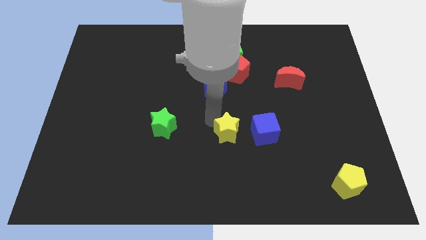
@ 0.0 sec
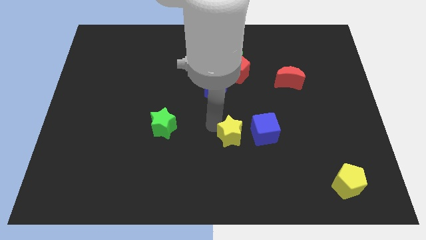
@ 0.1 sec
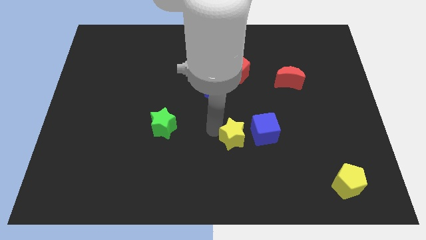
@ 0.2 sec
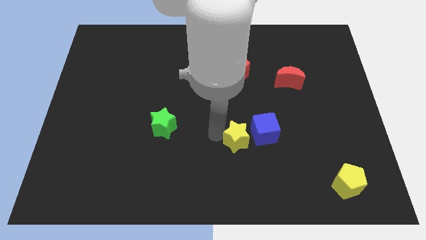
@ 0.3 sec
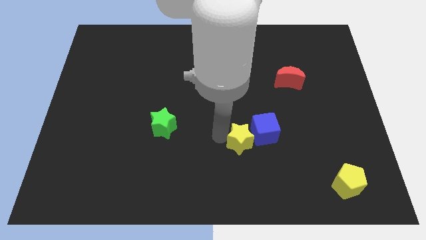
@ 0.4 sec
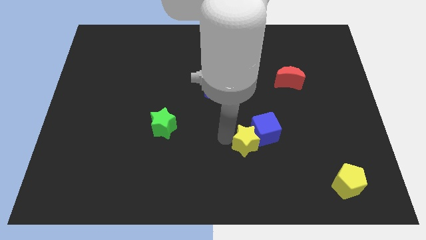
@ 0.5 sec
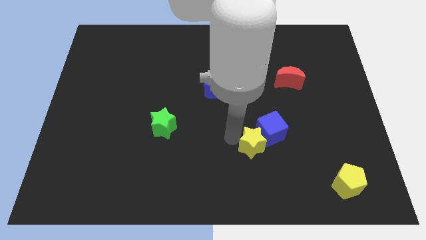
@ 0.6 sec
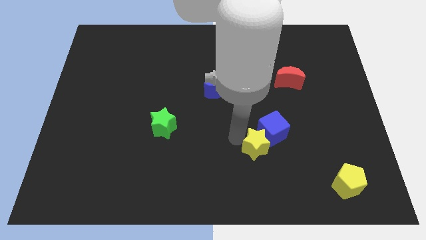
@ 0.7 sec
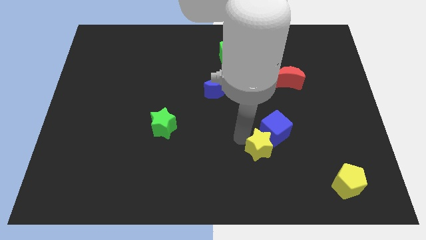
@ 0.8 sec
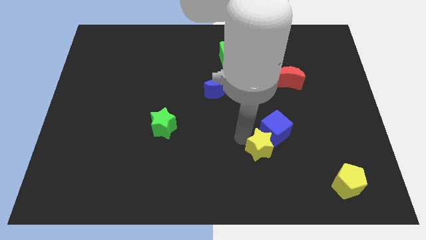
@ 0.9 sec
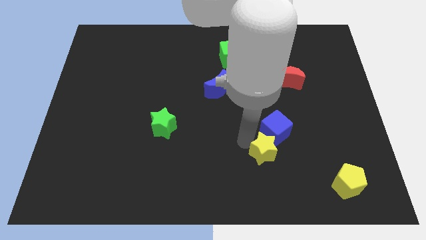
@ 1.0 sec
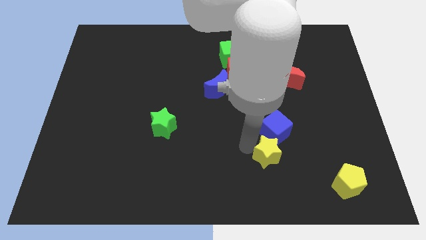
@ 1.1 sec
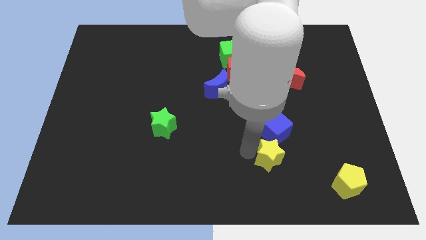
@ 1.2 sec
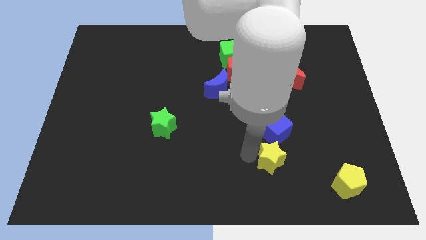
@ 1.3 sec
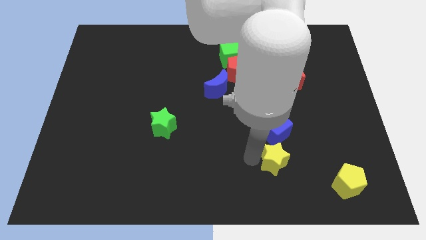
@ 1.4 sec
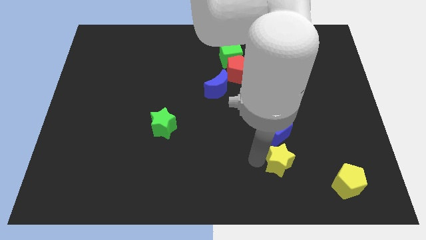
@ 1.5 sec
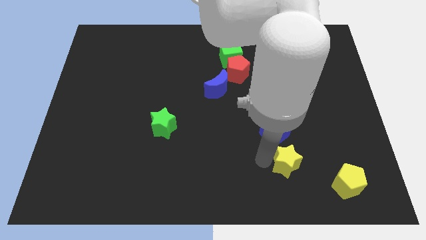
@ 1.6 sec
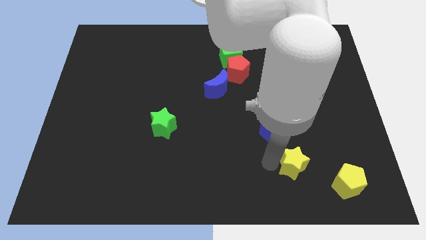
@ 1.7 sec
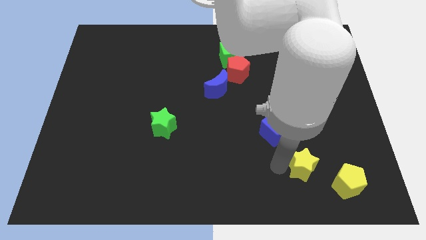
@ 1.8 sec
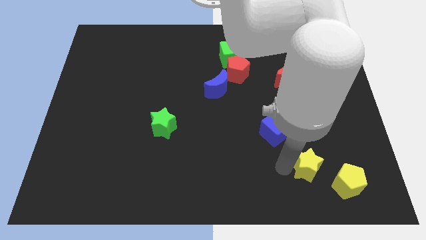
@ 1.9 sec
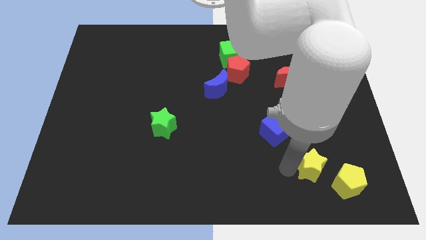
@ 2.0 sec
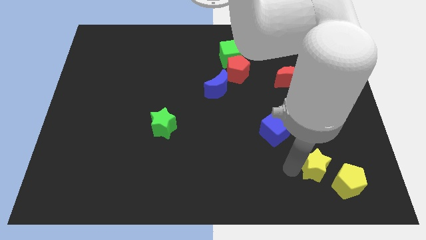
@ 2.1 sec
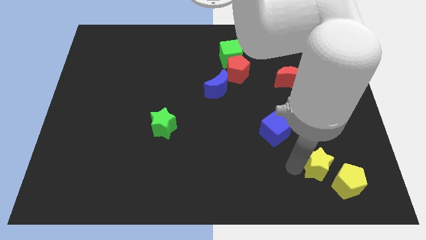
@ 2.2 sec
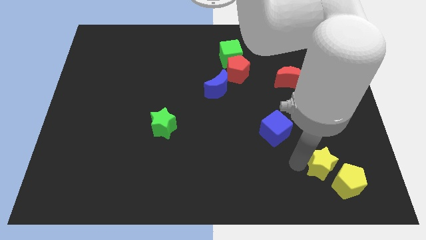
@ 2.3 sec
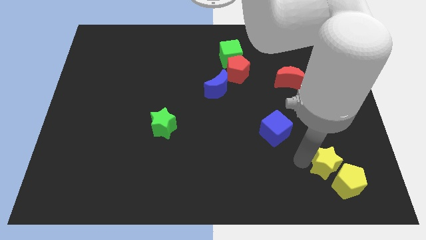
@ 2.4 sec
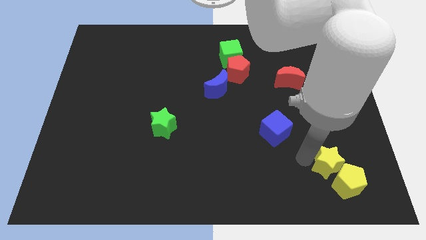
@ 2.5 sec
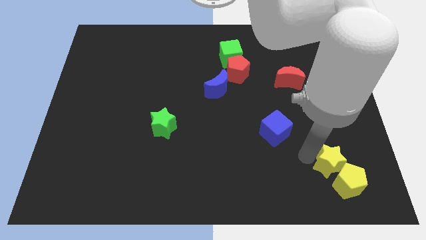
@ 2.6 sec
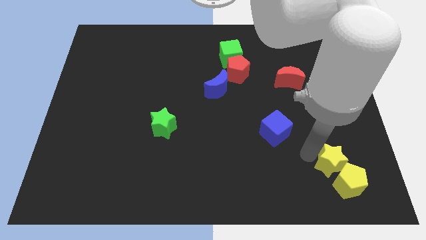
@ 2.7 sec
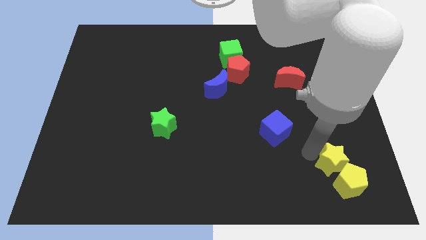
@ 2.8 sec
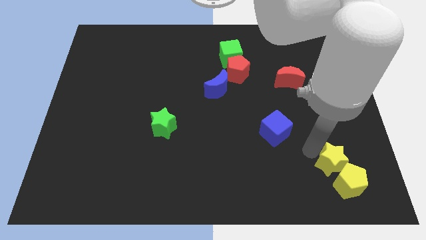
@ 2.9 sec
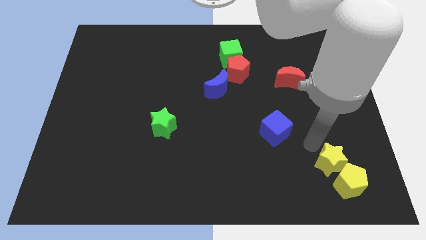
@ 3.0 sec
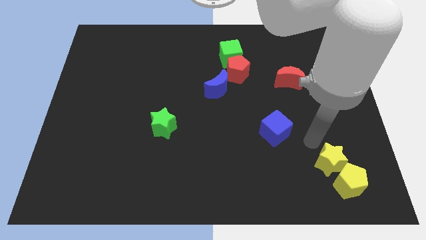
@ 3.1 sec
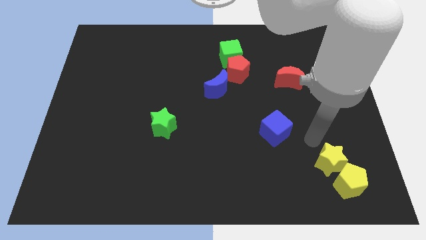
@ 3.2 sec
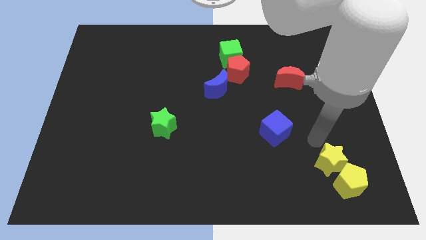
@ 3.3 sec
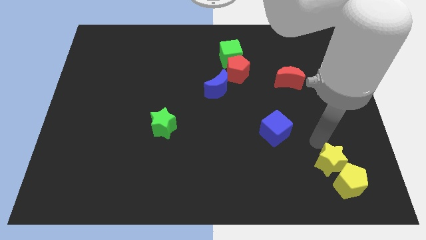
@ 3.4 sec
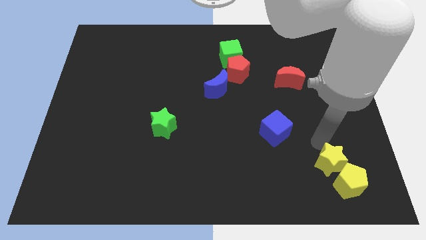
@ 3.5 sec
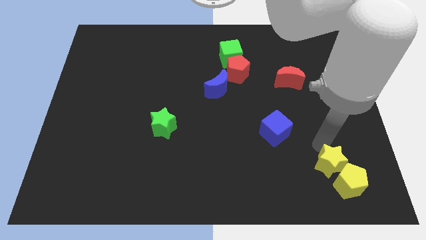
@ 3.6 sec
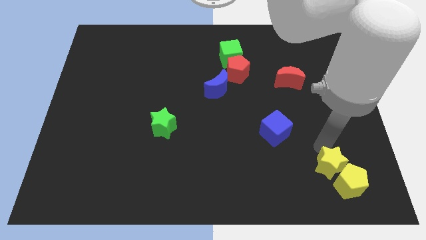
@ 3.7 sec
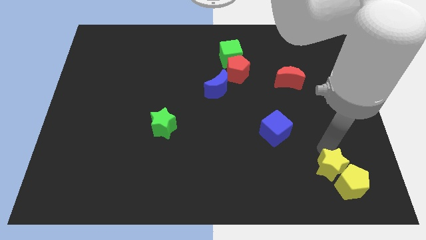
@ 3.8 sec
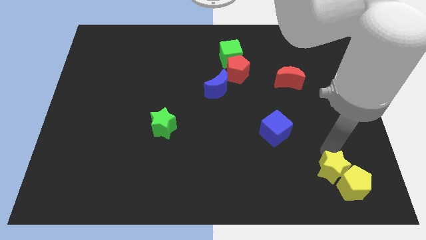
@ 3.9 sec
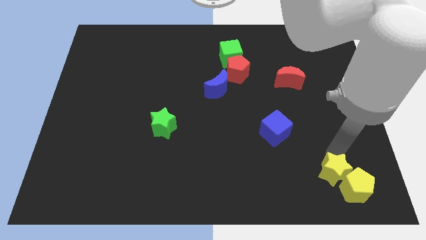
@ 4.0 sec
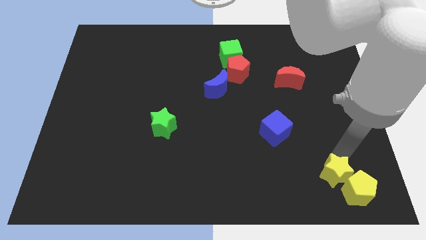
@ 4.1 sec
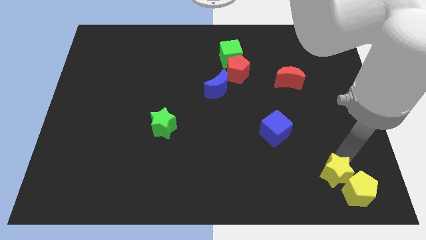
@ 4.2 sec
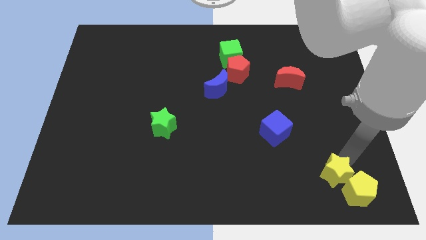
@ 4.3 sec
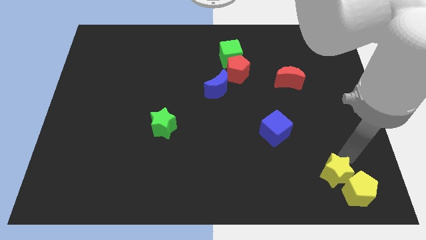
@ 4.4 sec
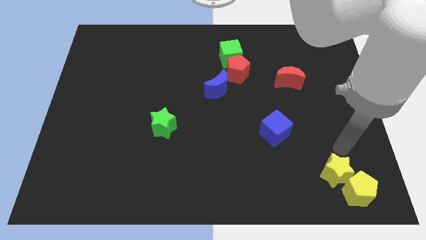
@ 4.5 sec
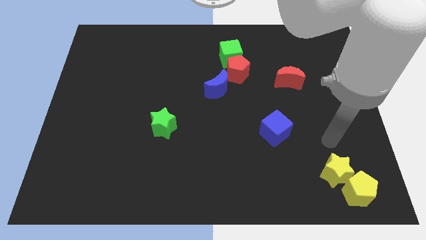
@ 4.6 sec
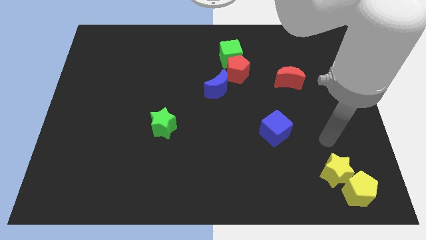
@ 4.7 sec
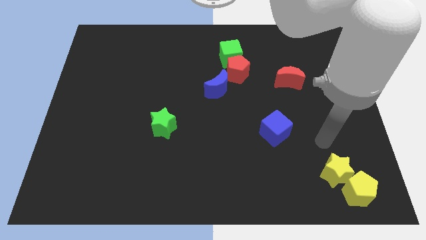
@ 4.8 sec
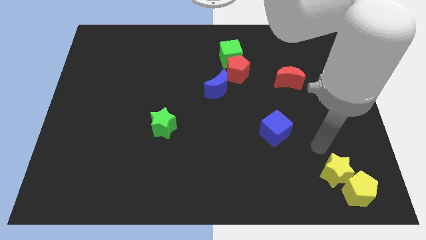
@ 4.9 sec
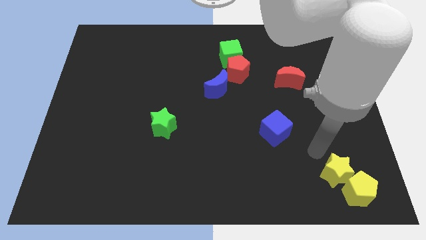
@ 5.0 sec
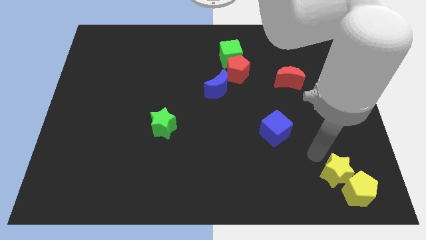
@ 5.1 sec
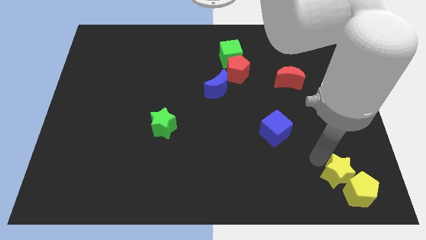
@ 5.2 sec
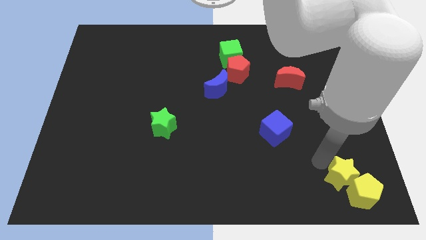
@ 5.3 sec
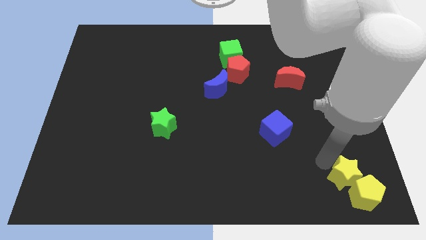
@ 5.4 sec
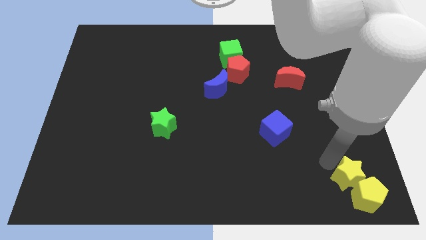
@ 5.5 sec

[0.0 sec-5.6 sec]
push the yellow star into the yellow pentagon

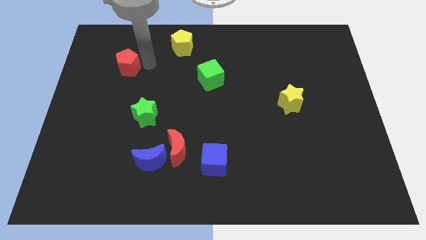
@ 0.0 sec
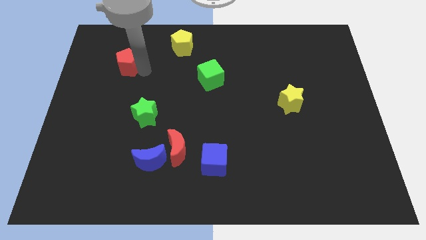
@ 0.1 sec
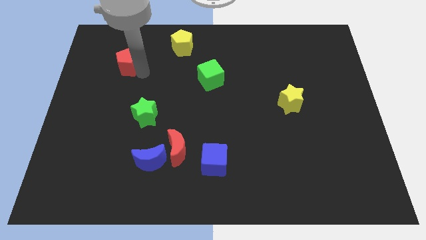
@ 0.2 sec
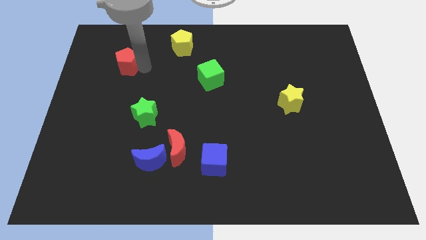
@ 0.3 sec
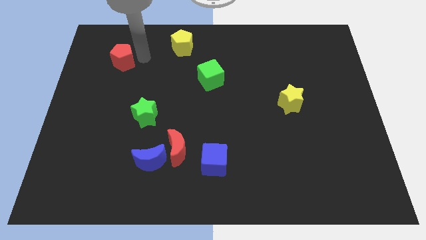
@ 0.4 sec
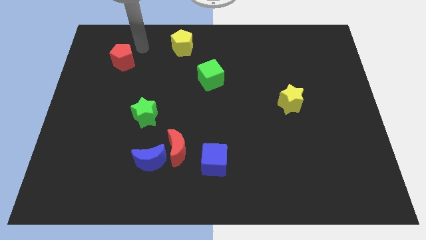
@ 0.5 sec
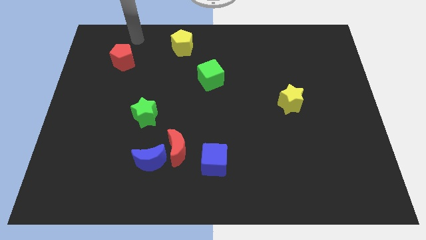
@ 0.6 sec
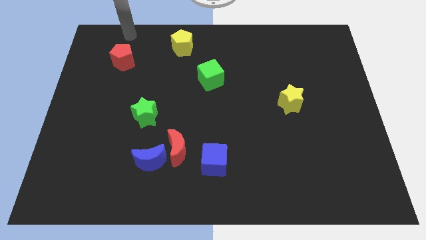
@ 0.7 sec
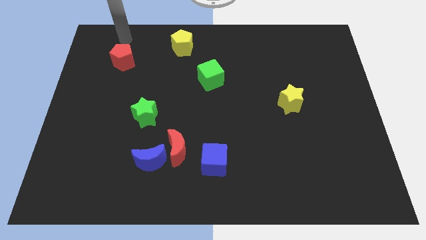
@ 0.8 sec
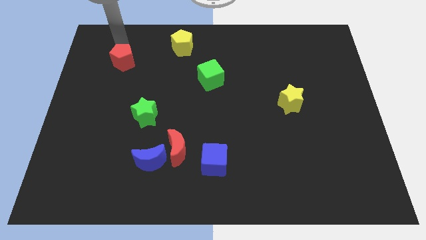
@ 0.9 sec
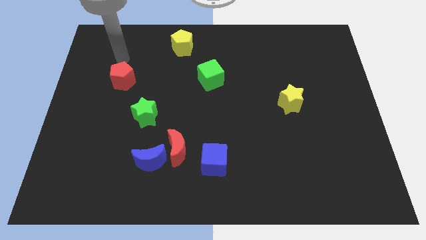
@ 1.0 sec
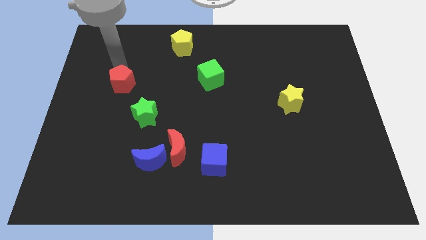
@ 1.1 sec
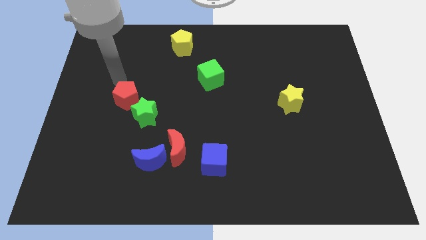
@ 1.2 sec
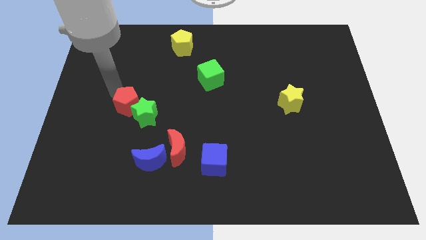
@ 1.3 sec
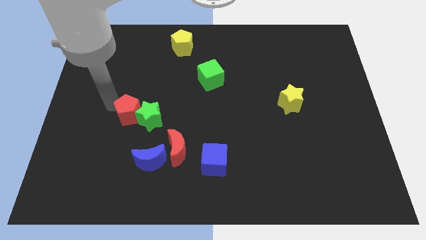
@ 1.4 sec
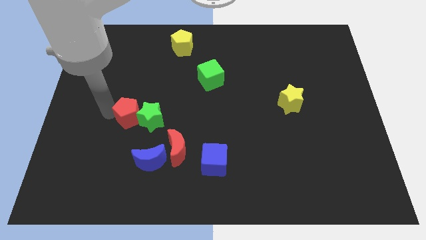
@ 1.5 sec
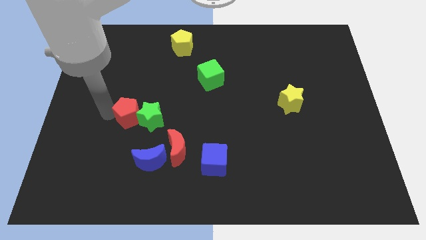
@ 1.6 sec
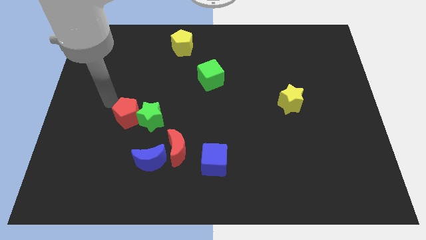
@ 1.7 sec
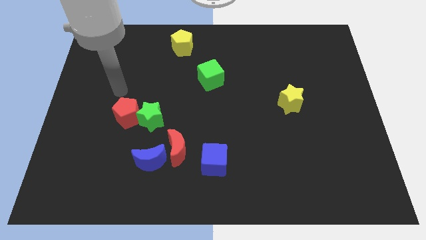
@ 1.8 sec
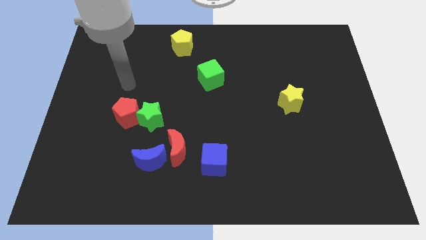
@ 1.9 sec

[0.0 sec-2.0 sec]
place the red pentagon towards the left side of the green star

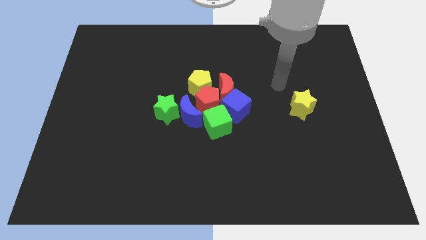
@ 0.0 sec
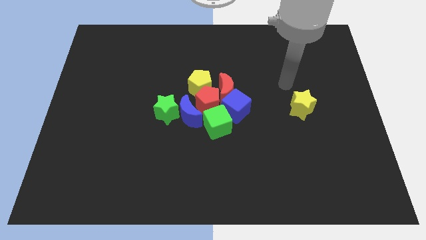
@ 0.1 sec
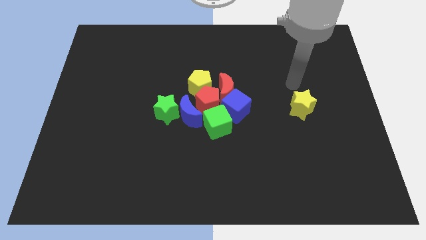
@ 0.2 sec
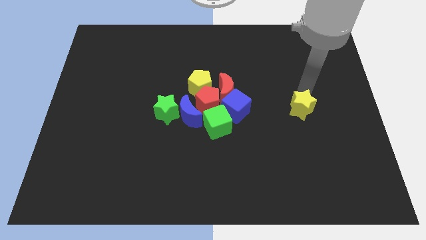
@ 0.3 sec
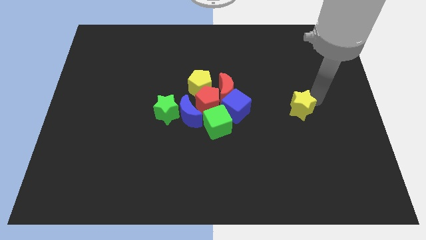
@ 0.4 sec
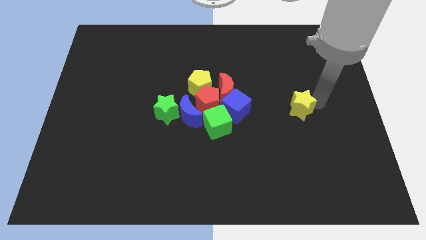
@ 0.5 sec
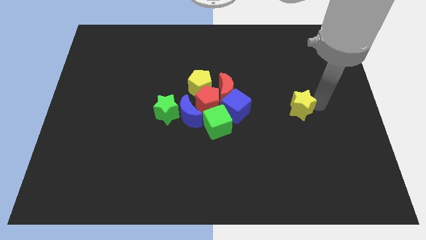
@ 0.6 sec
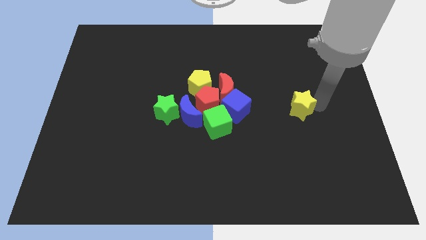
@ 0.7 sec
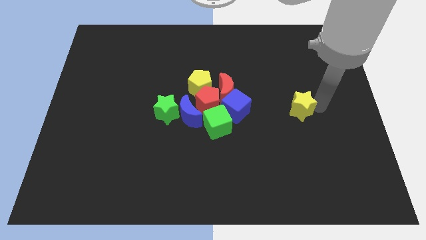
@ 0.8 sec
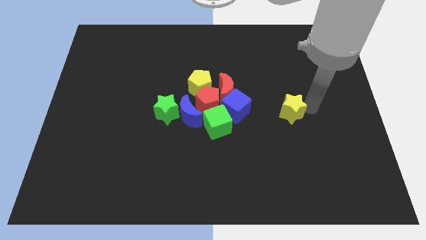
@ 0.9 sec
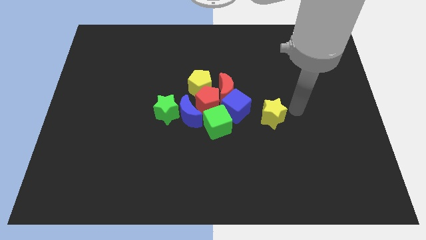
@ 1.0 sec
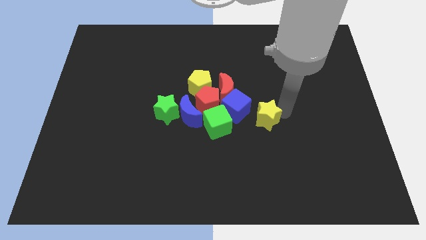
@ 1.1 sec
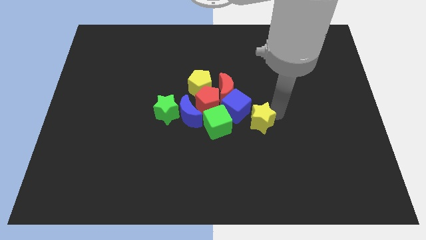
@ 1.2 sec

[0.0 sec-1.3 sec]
slide the yellow star to the right side of the blue cube
